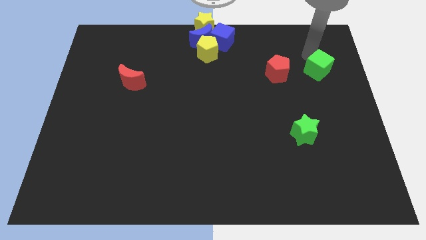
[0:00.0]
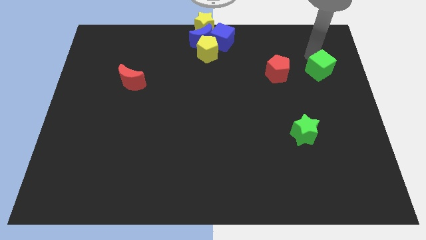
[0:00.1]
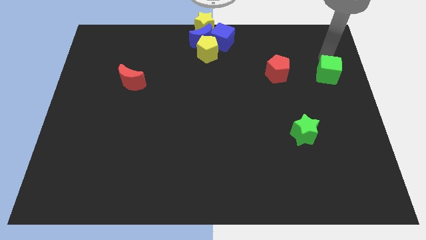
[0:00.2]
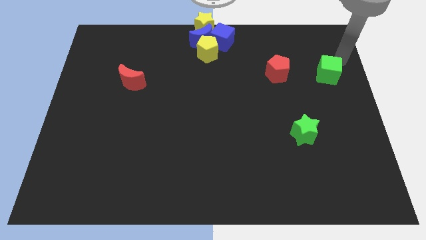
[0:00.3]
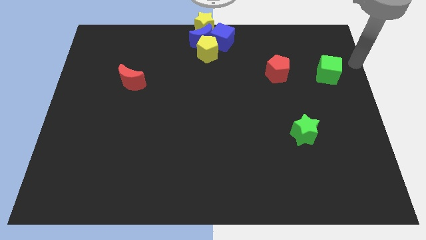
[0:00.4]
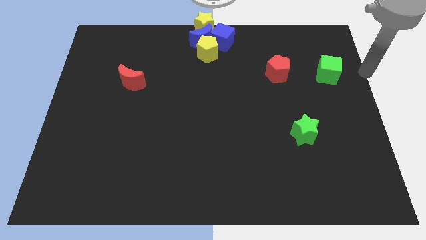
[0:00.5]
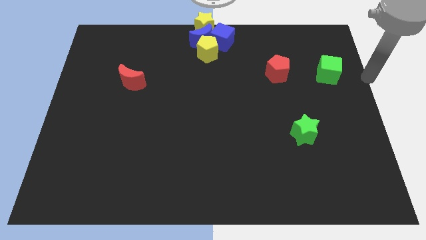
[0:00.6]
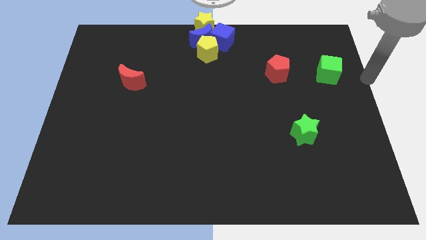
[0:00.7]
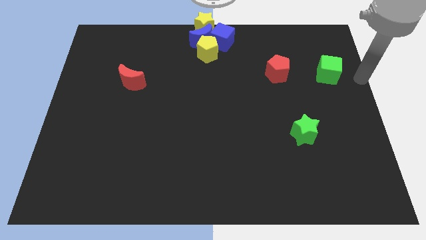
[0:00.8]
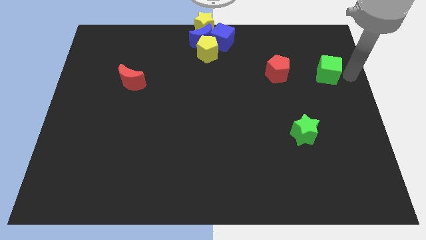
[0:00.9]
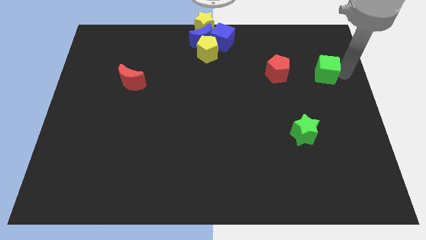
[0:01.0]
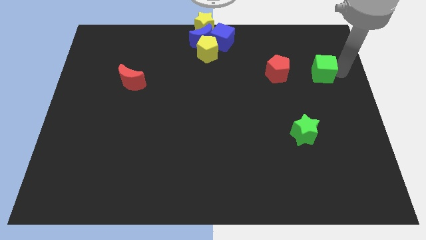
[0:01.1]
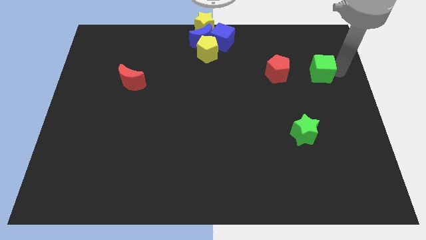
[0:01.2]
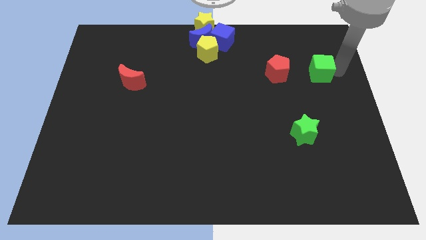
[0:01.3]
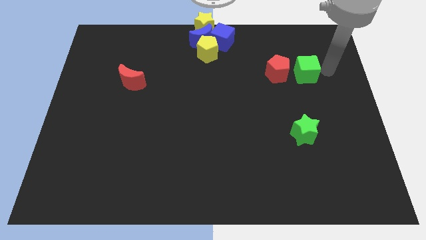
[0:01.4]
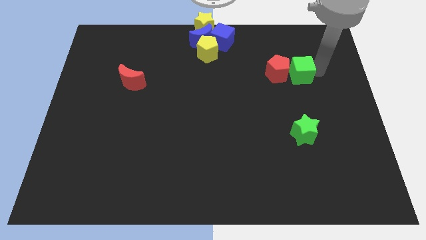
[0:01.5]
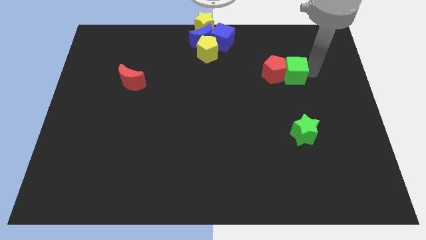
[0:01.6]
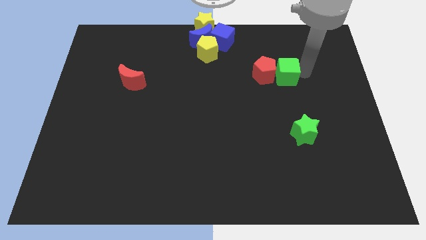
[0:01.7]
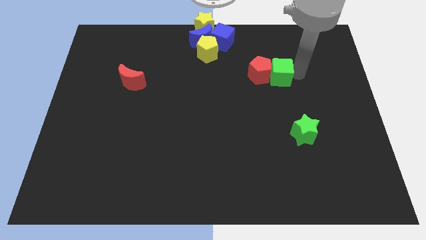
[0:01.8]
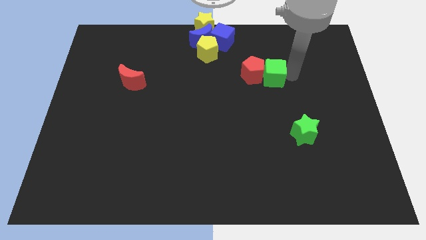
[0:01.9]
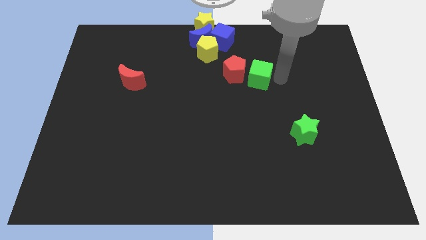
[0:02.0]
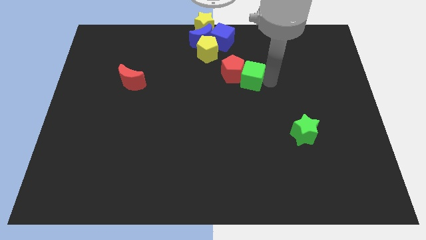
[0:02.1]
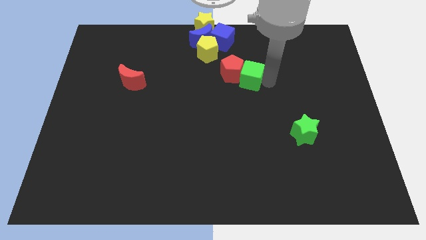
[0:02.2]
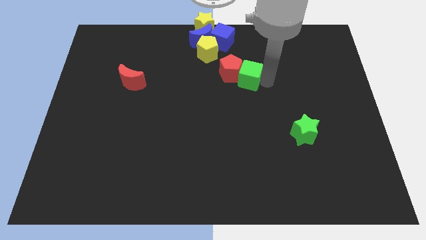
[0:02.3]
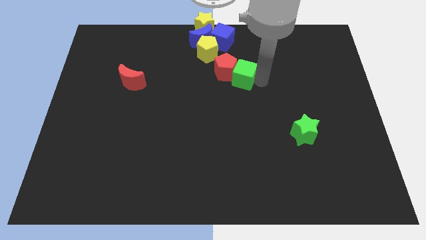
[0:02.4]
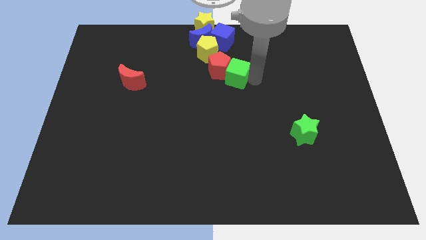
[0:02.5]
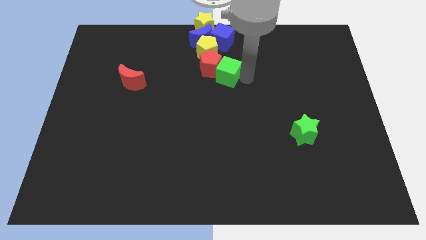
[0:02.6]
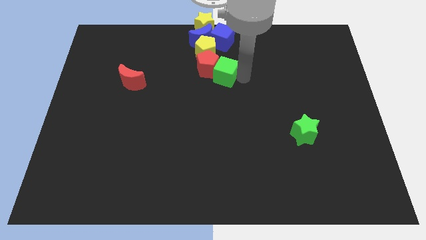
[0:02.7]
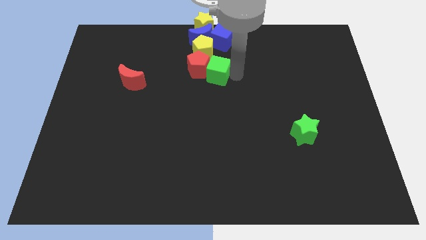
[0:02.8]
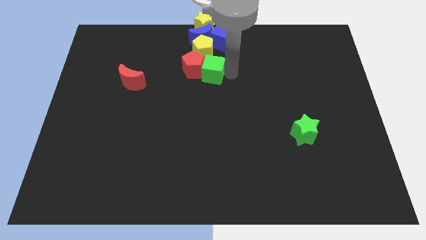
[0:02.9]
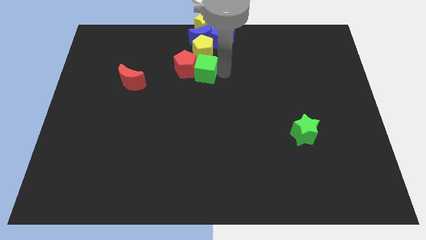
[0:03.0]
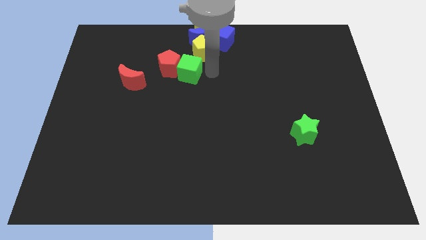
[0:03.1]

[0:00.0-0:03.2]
push the green cube and red pentagon together into the group of blocks

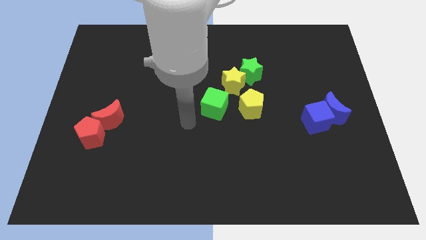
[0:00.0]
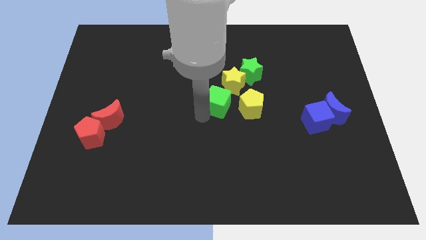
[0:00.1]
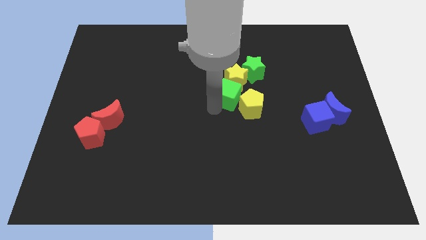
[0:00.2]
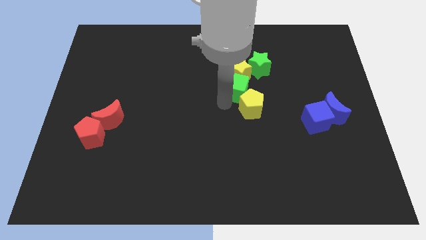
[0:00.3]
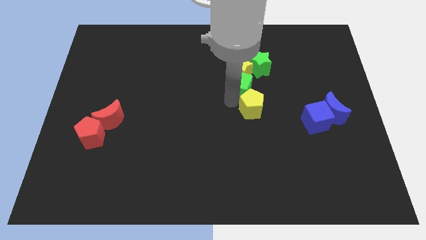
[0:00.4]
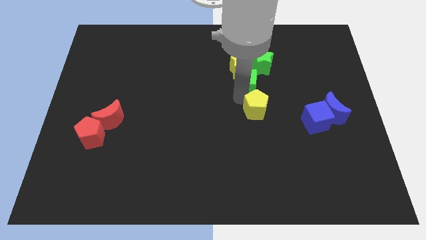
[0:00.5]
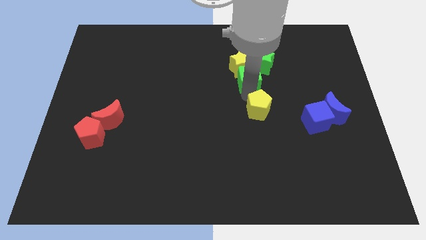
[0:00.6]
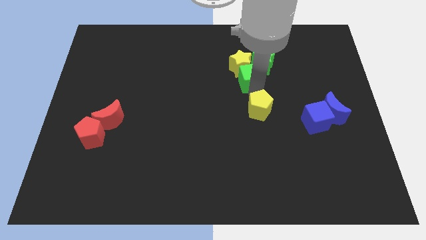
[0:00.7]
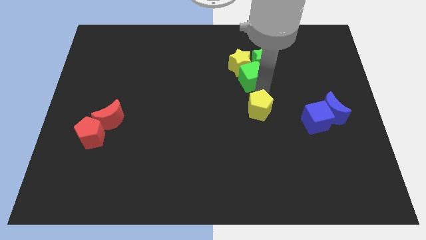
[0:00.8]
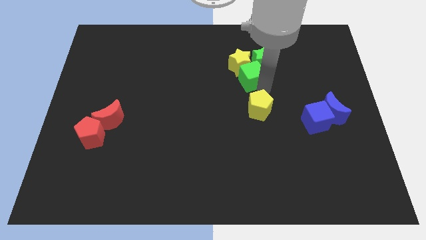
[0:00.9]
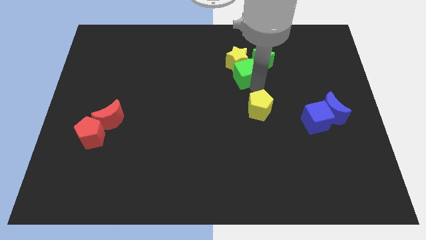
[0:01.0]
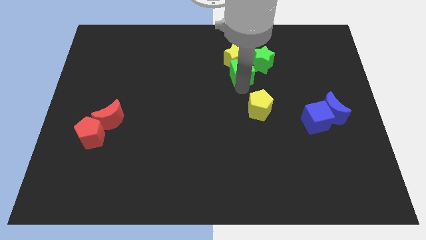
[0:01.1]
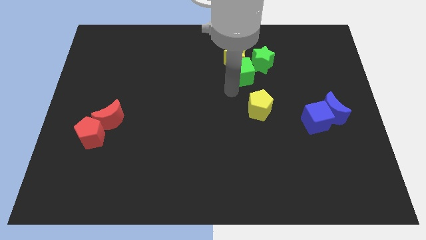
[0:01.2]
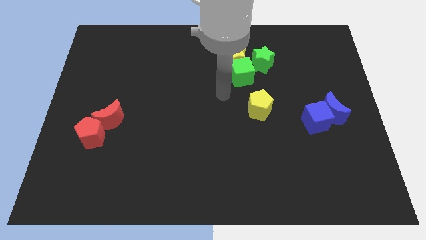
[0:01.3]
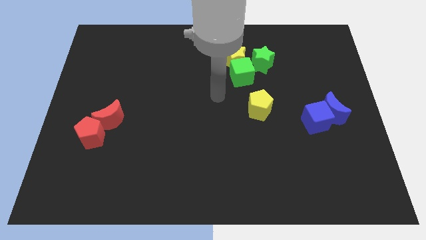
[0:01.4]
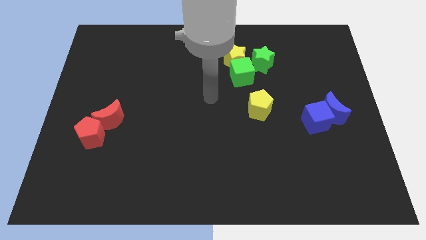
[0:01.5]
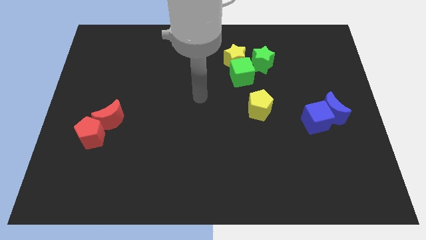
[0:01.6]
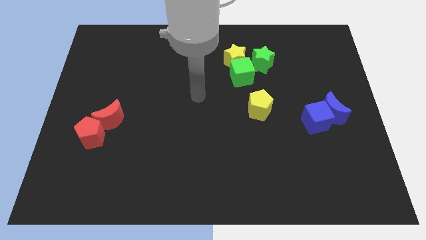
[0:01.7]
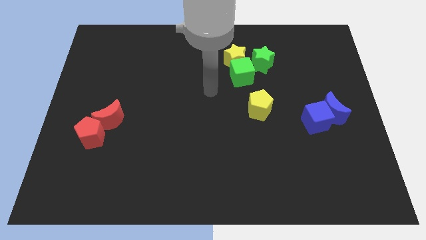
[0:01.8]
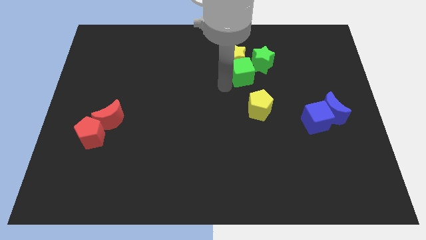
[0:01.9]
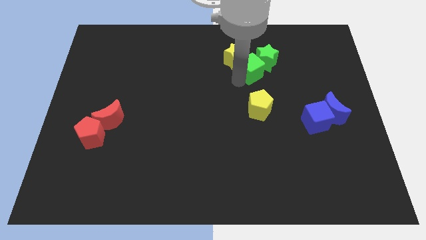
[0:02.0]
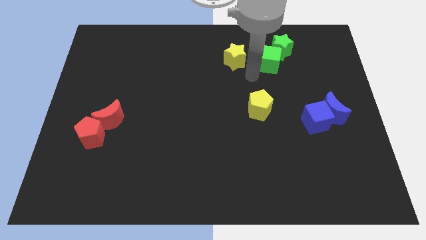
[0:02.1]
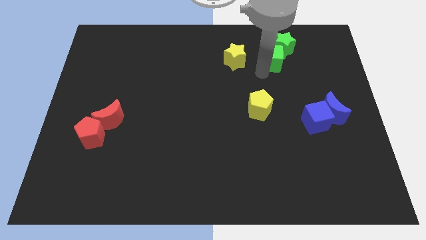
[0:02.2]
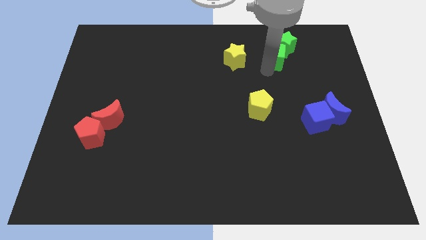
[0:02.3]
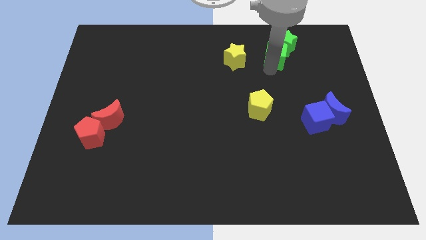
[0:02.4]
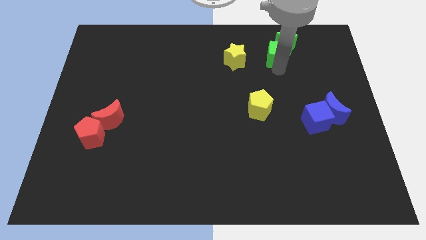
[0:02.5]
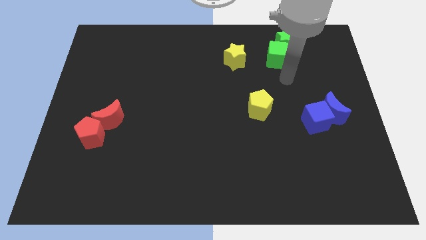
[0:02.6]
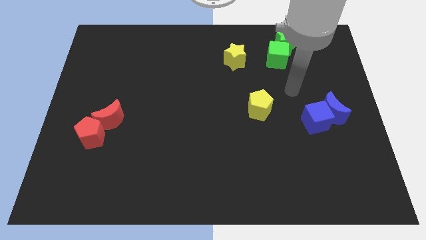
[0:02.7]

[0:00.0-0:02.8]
push the green star towards the top right corner with the green cube

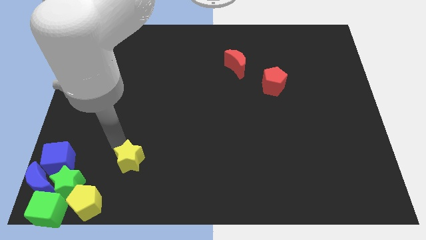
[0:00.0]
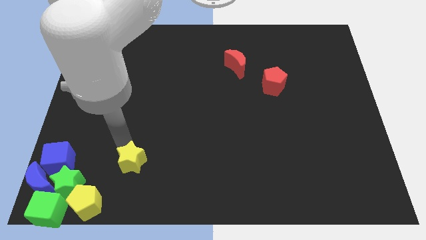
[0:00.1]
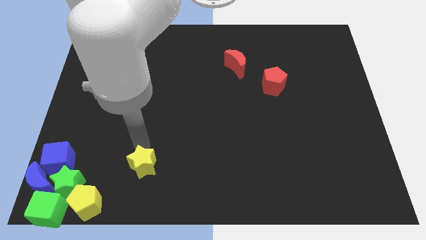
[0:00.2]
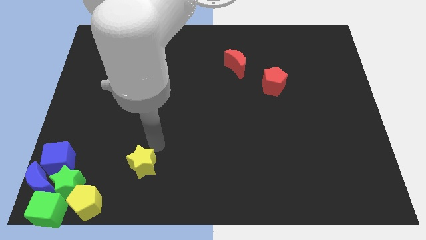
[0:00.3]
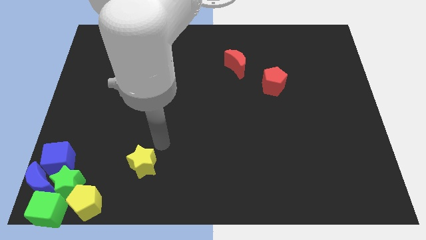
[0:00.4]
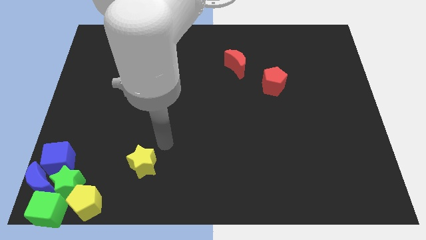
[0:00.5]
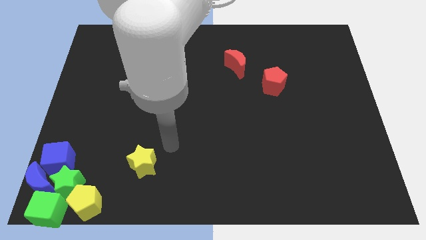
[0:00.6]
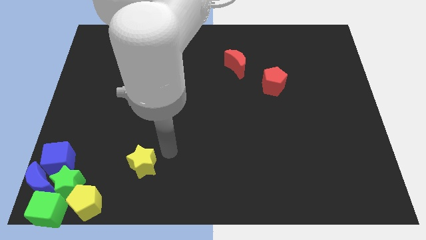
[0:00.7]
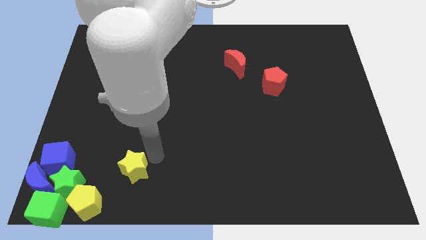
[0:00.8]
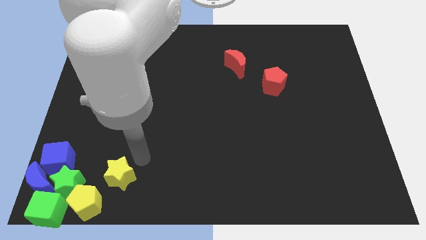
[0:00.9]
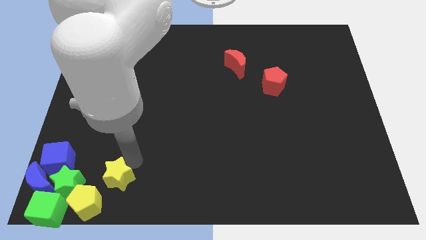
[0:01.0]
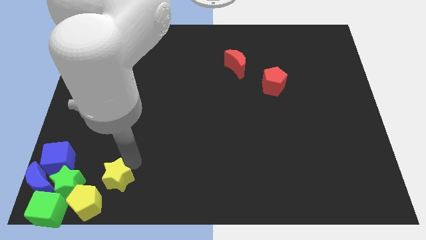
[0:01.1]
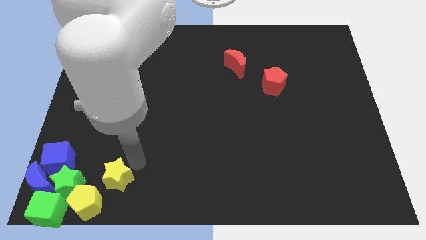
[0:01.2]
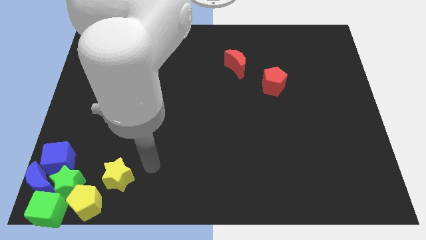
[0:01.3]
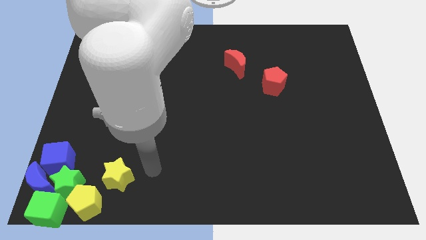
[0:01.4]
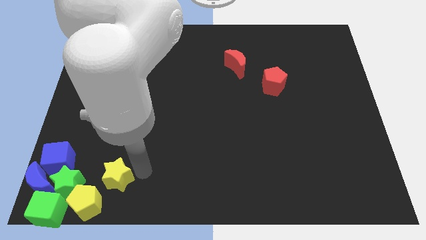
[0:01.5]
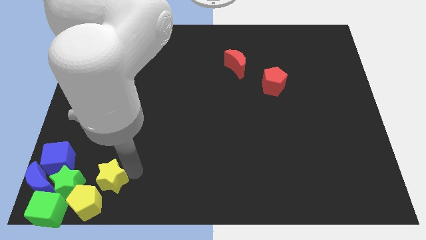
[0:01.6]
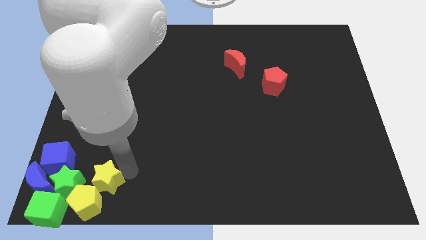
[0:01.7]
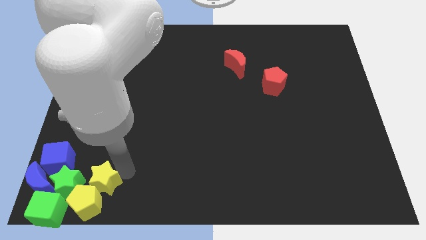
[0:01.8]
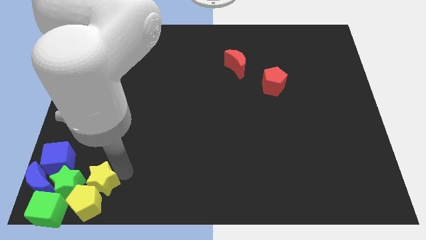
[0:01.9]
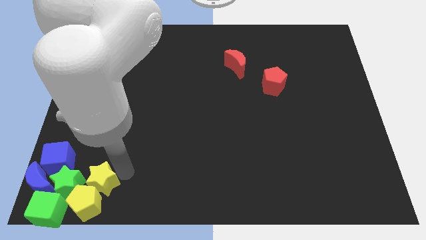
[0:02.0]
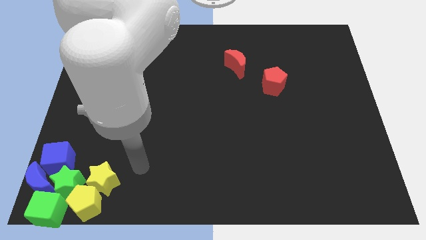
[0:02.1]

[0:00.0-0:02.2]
push the yellow star into the yellow pentagon

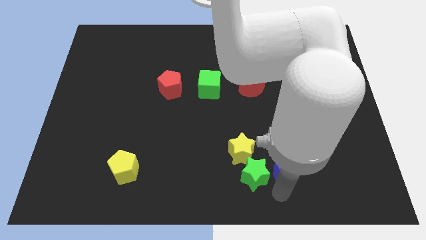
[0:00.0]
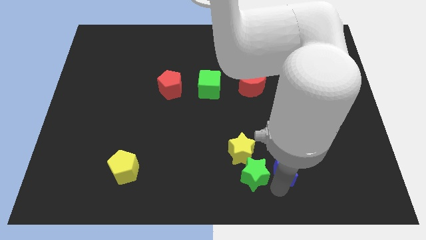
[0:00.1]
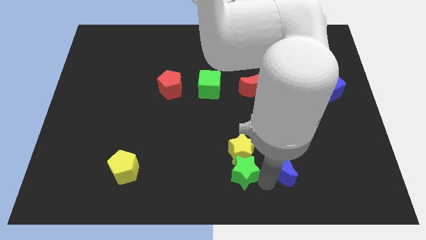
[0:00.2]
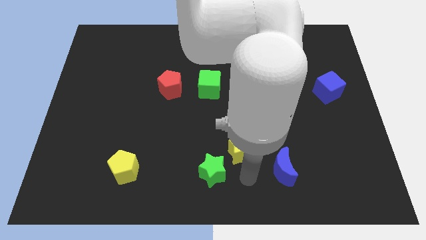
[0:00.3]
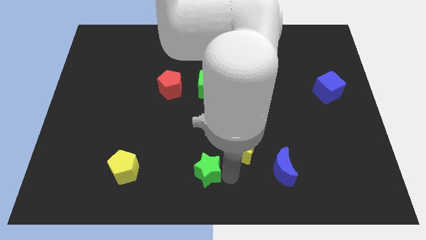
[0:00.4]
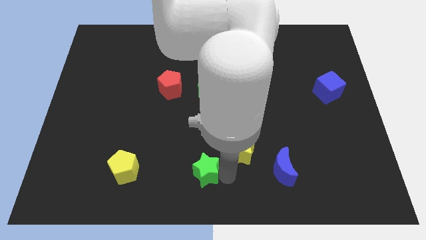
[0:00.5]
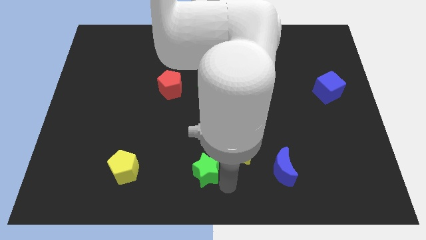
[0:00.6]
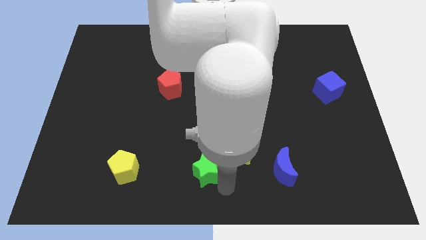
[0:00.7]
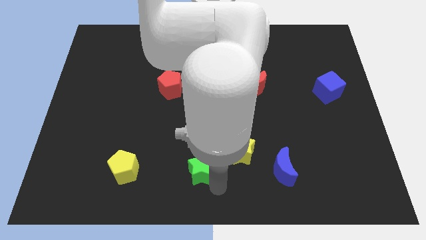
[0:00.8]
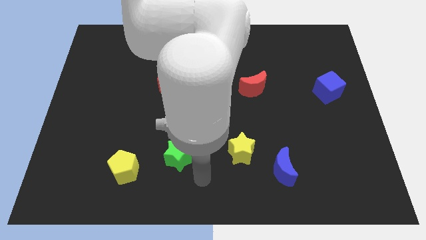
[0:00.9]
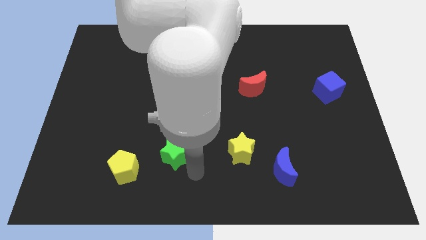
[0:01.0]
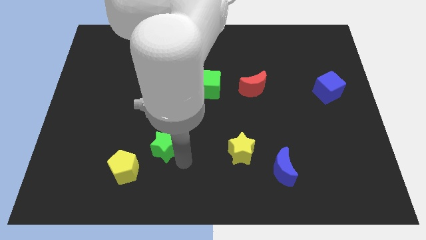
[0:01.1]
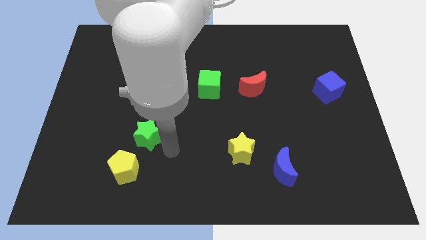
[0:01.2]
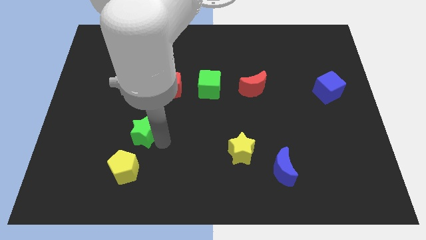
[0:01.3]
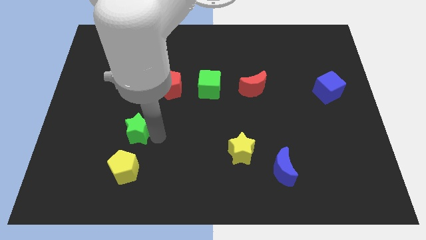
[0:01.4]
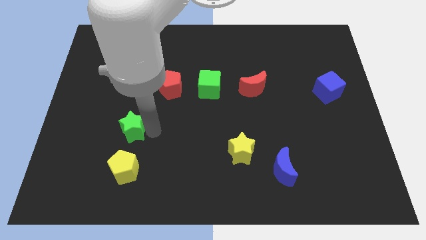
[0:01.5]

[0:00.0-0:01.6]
move green star to the top of yellow pentagon
